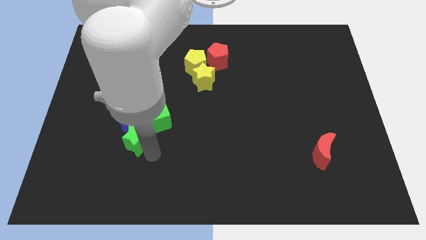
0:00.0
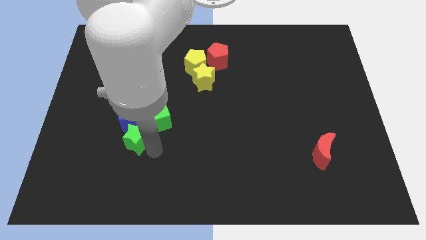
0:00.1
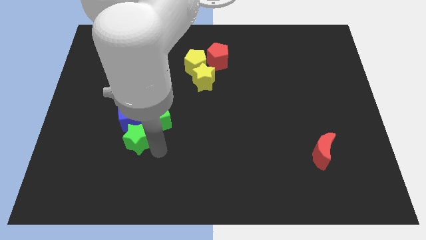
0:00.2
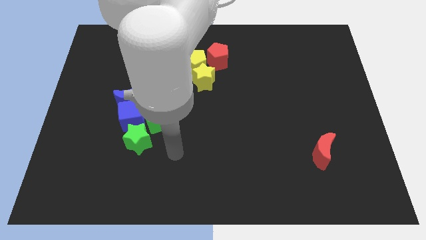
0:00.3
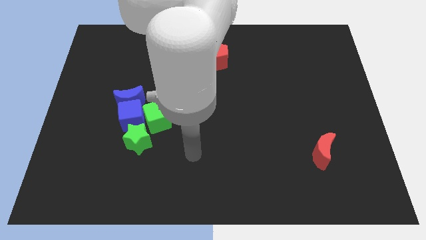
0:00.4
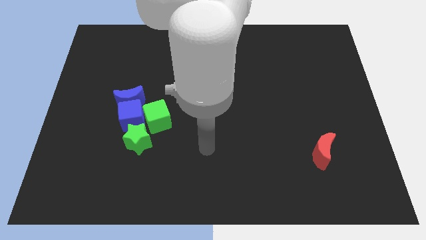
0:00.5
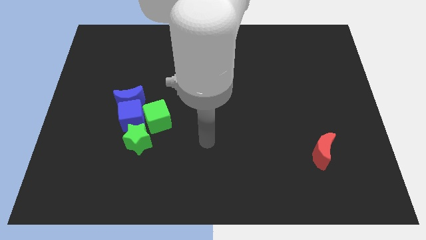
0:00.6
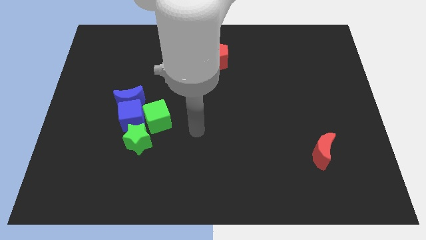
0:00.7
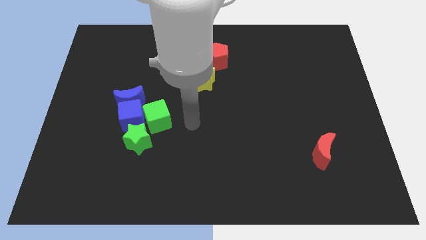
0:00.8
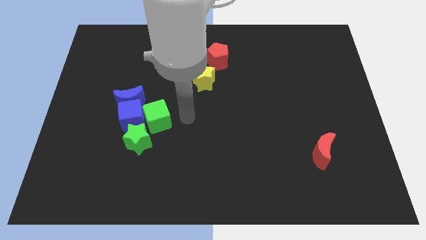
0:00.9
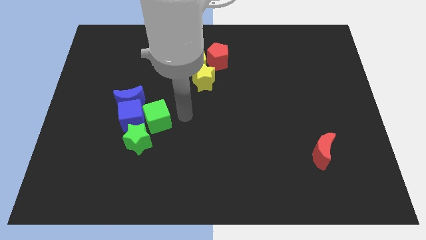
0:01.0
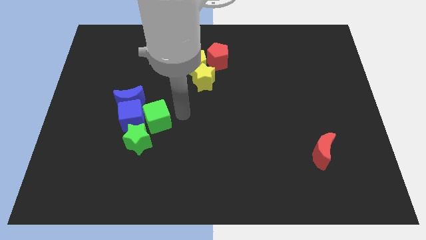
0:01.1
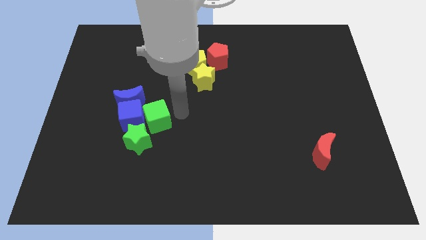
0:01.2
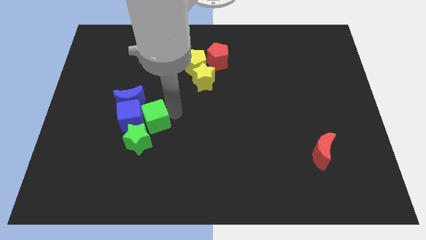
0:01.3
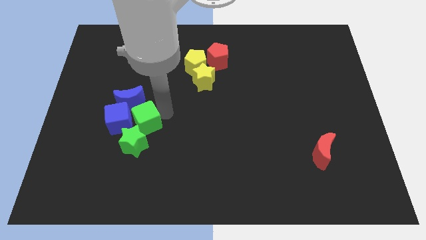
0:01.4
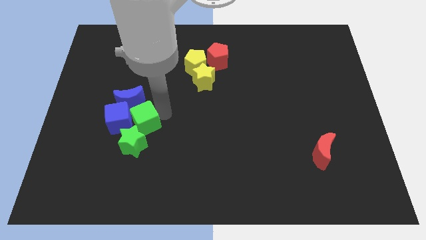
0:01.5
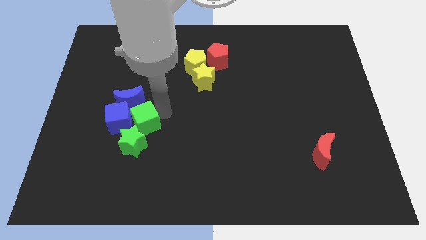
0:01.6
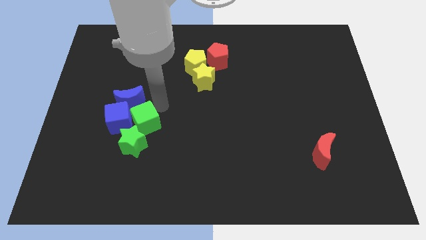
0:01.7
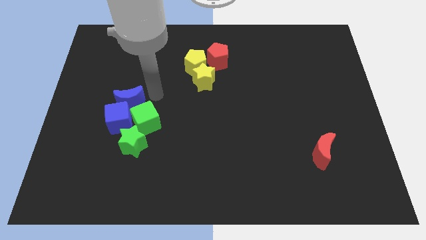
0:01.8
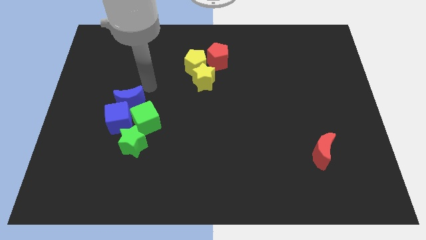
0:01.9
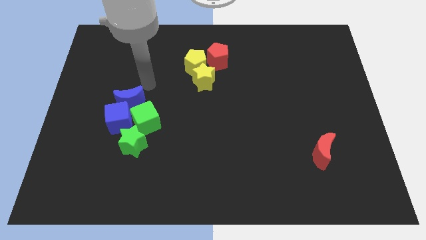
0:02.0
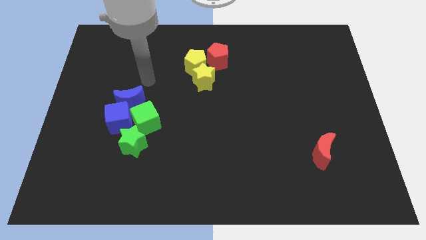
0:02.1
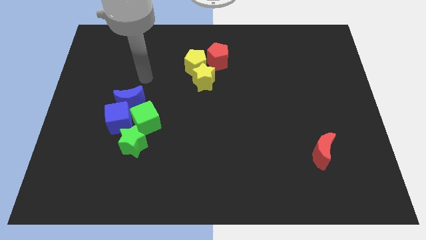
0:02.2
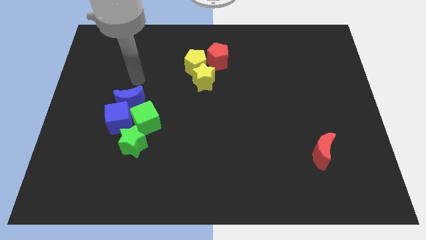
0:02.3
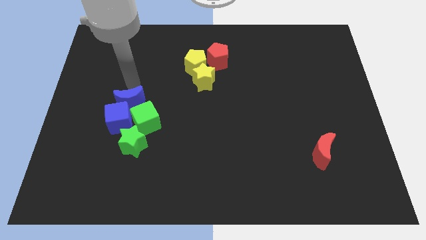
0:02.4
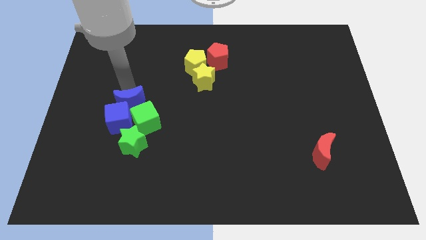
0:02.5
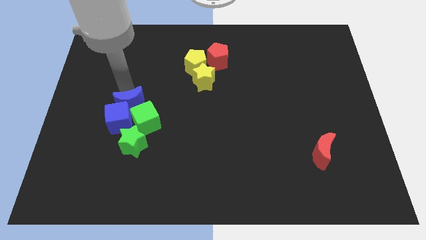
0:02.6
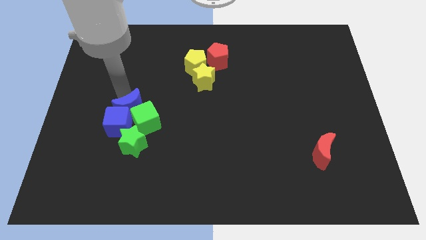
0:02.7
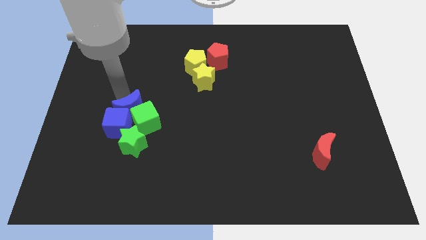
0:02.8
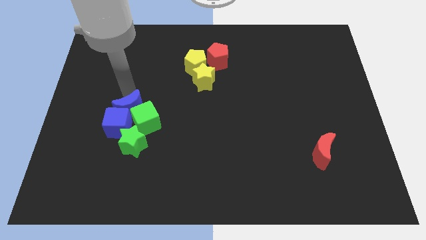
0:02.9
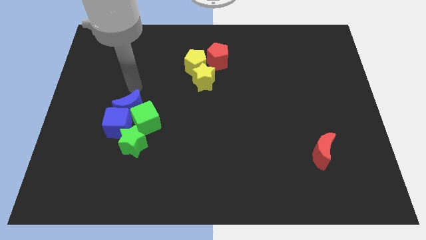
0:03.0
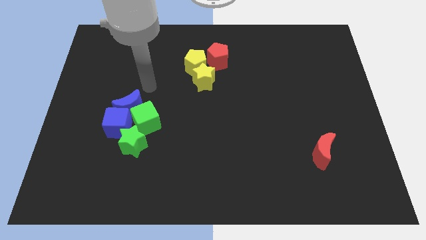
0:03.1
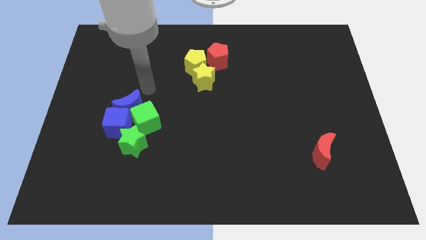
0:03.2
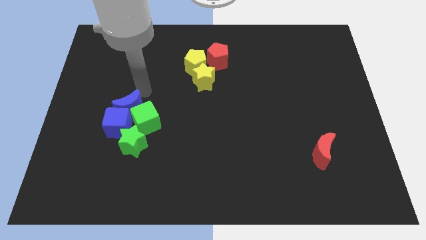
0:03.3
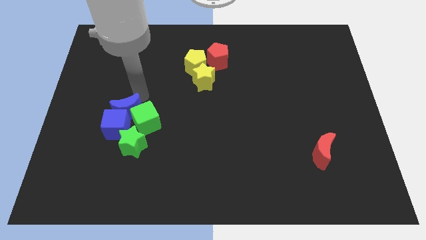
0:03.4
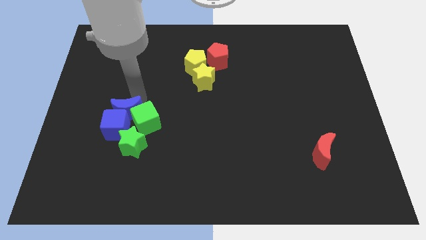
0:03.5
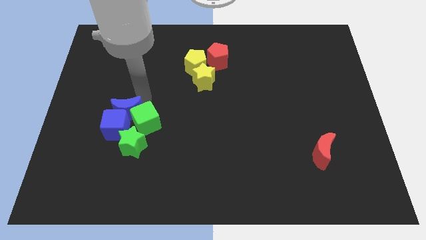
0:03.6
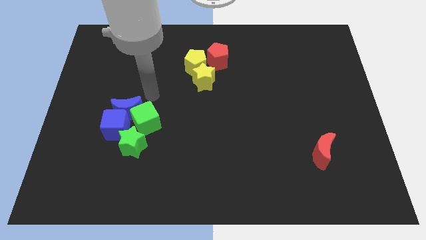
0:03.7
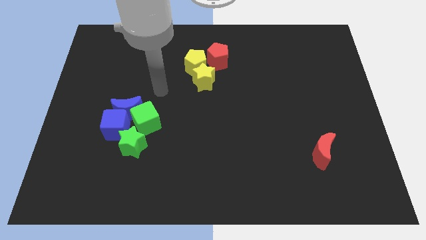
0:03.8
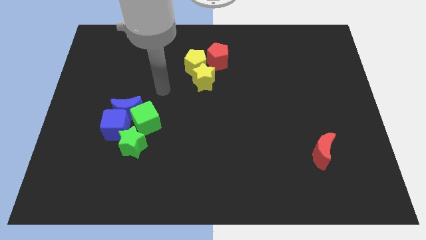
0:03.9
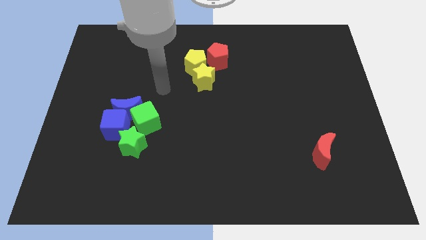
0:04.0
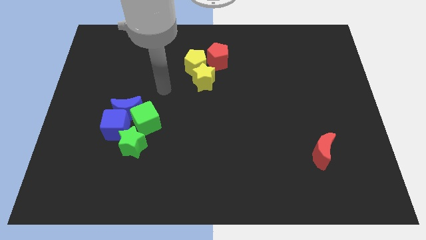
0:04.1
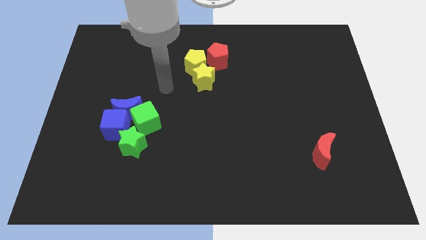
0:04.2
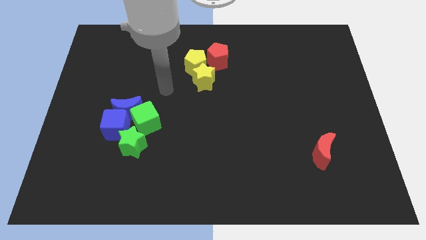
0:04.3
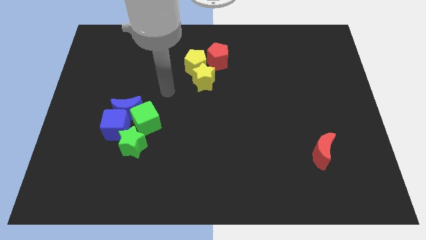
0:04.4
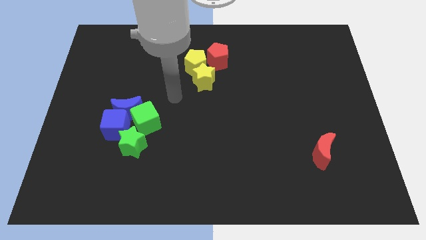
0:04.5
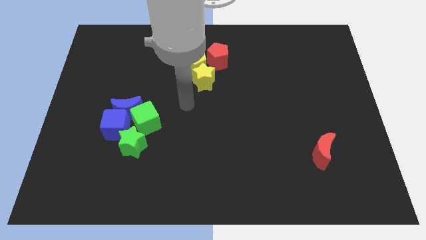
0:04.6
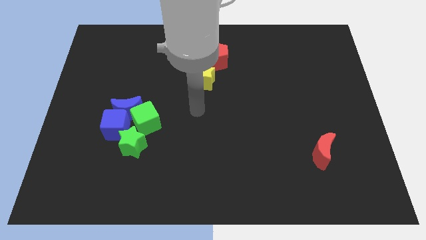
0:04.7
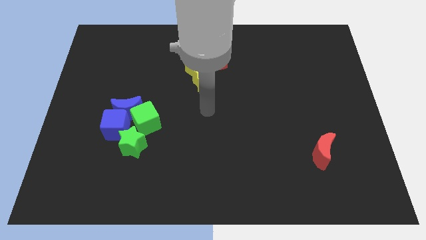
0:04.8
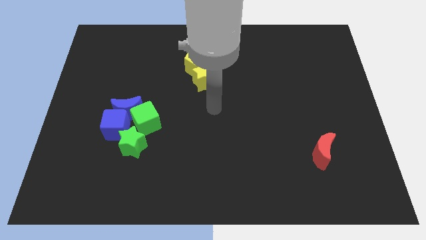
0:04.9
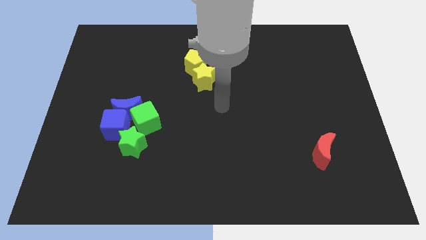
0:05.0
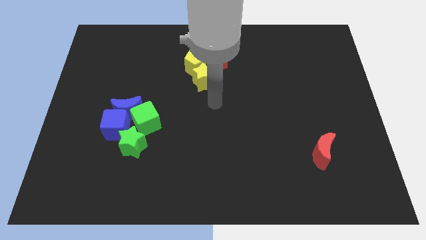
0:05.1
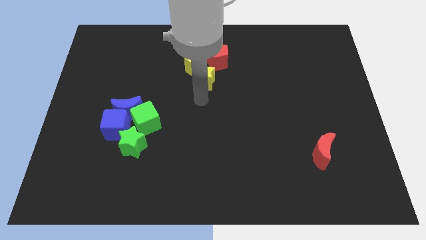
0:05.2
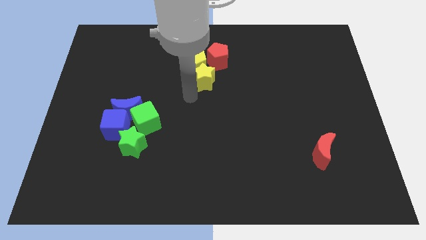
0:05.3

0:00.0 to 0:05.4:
make blue and green cube and green star and blue crescent into a group

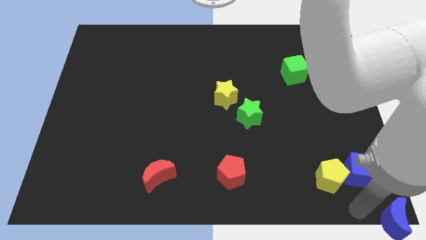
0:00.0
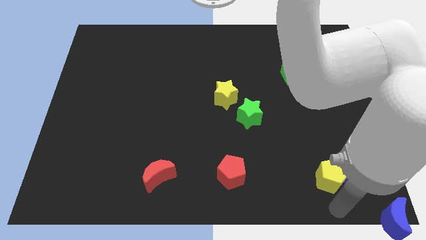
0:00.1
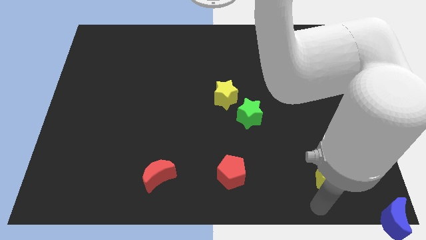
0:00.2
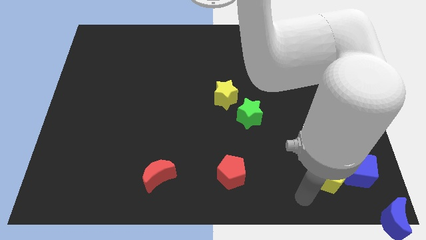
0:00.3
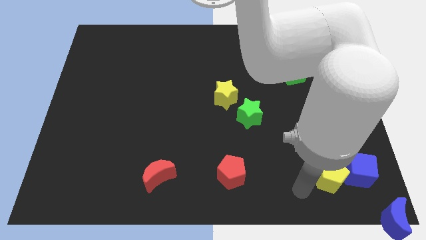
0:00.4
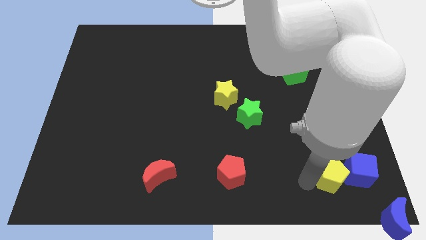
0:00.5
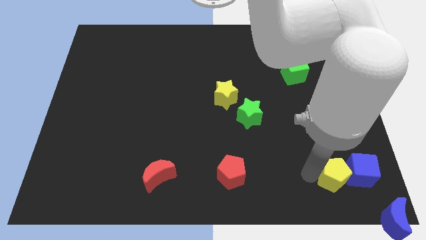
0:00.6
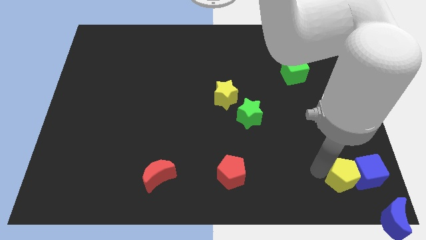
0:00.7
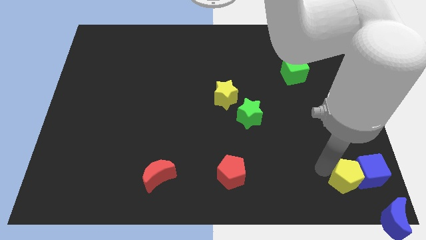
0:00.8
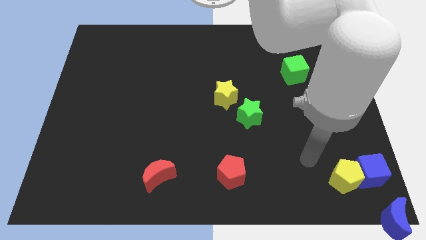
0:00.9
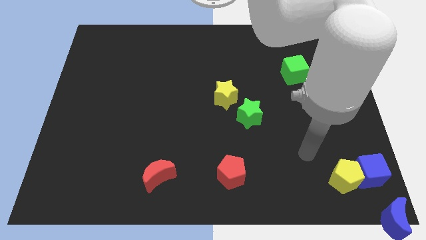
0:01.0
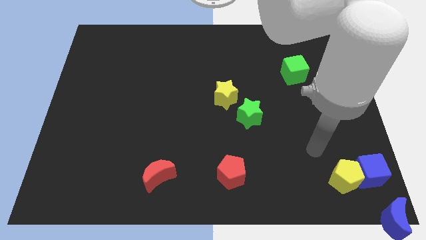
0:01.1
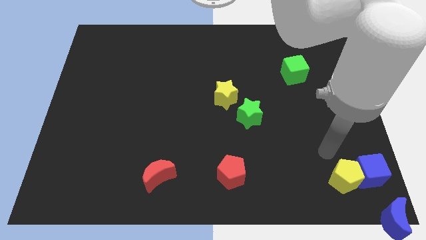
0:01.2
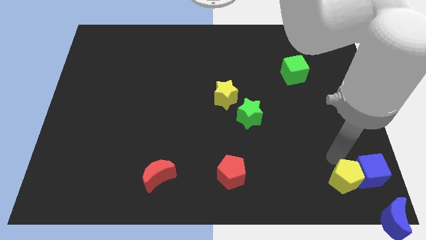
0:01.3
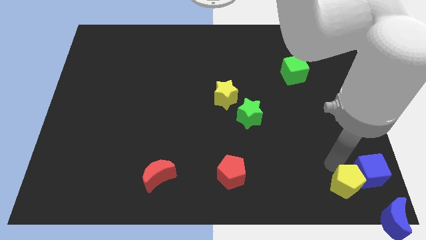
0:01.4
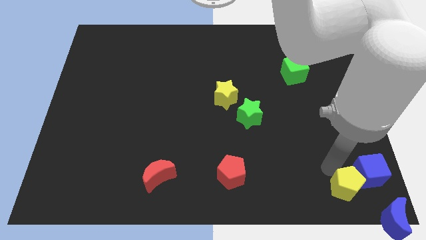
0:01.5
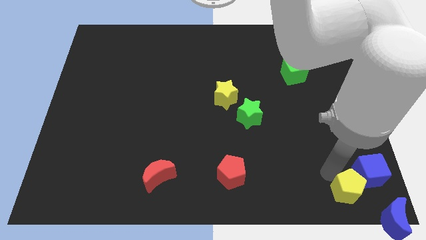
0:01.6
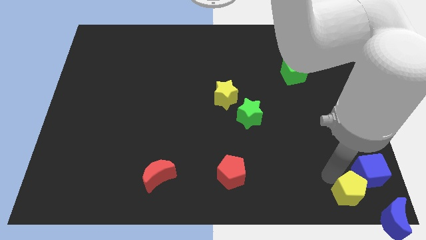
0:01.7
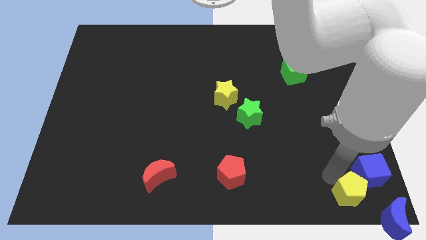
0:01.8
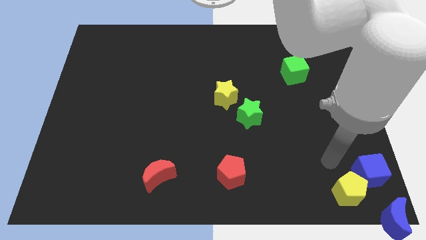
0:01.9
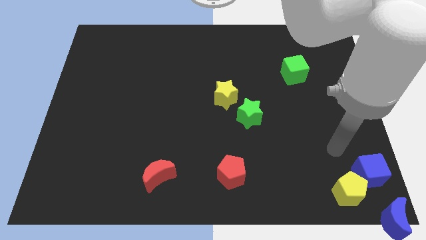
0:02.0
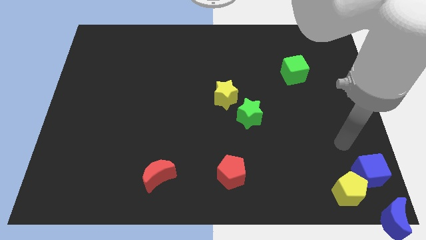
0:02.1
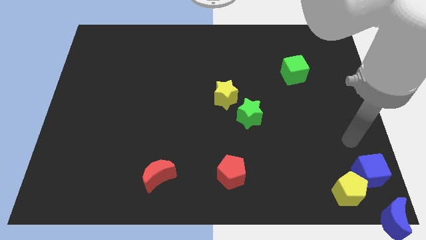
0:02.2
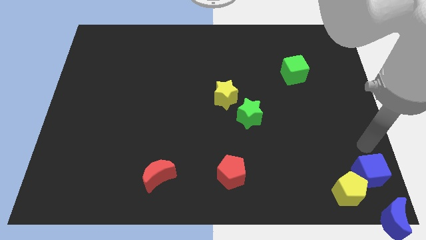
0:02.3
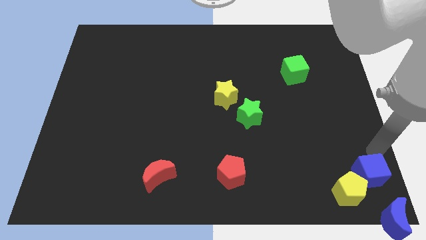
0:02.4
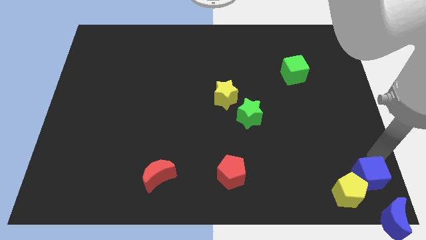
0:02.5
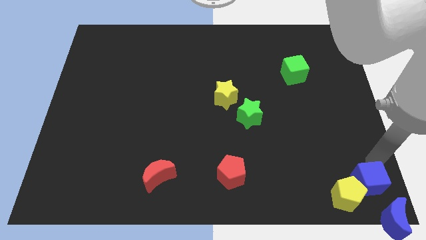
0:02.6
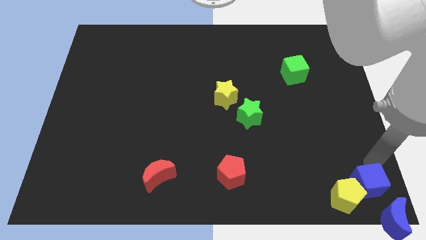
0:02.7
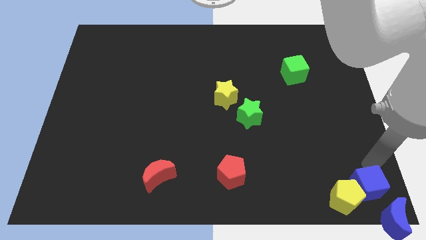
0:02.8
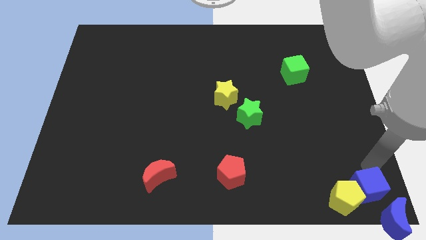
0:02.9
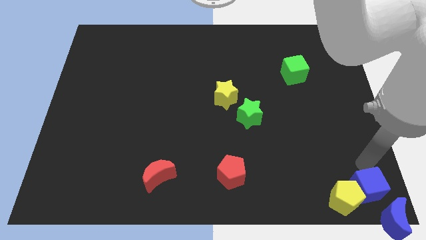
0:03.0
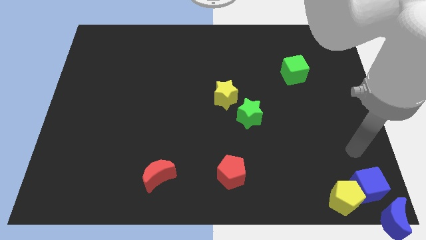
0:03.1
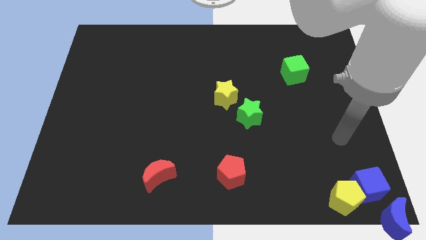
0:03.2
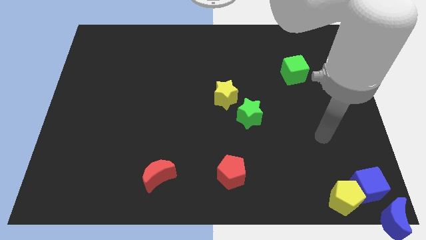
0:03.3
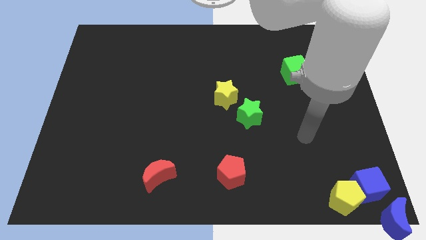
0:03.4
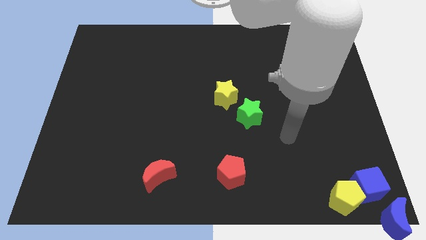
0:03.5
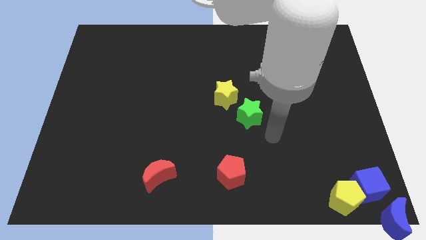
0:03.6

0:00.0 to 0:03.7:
move the yellow pentagon and blue cube to the bottom right of the board
